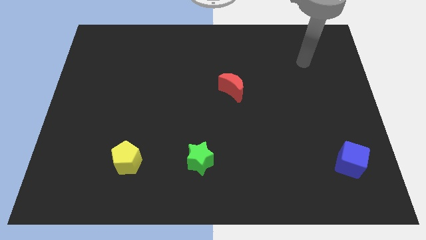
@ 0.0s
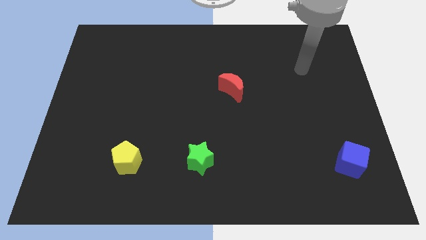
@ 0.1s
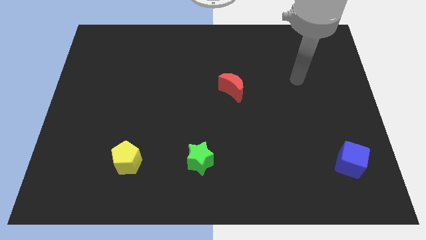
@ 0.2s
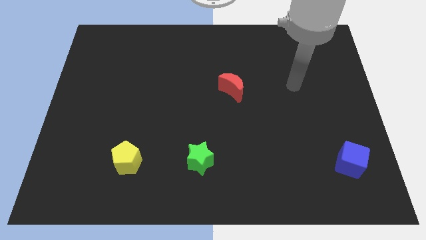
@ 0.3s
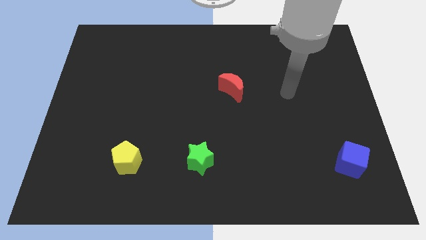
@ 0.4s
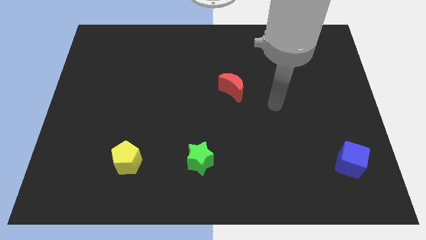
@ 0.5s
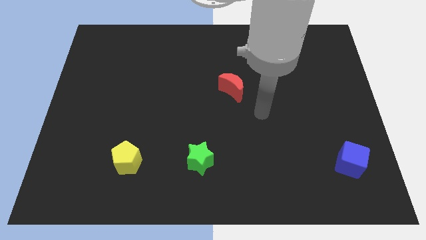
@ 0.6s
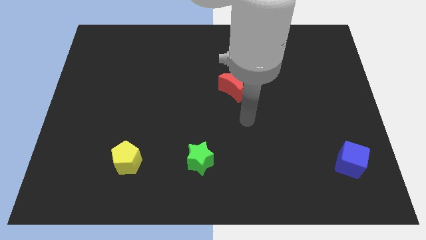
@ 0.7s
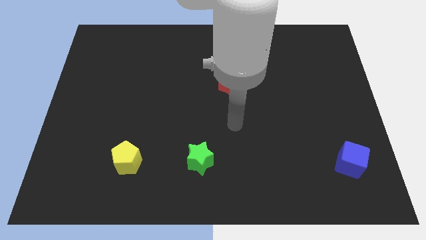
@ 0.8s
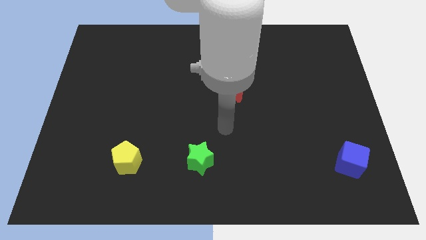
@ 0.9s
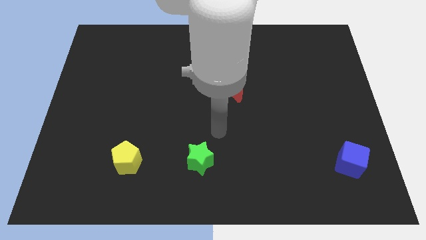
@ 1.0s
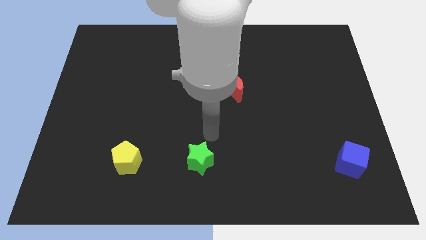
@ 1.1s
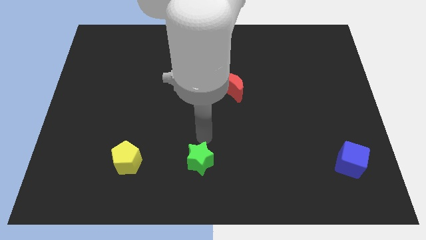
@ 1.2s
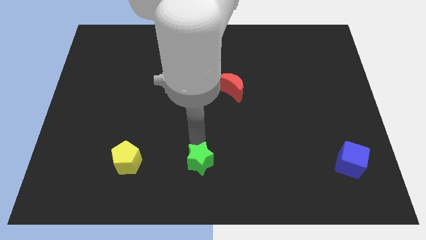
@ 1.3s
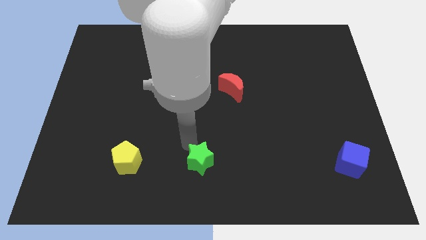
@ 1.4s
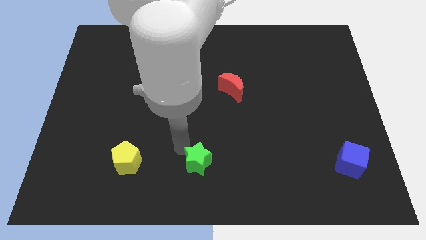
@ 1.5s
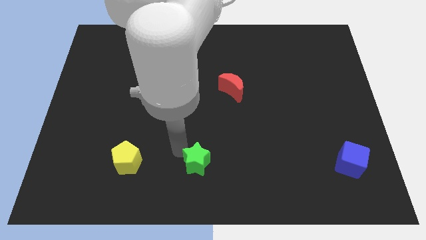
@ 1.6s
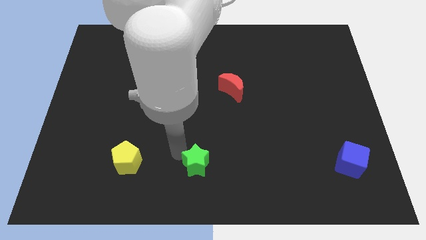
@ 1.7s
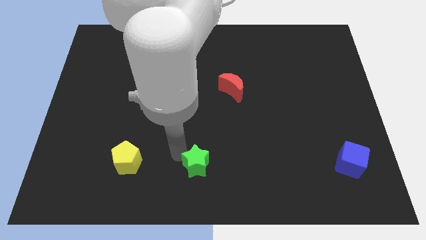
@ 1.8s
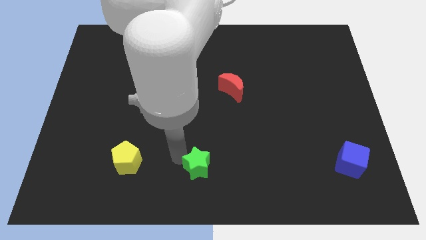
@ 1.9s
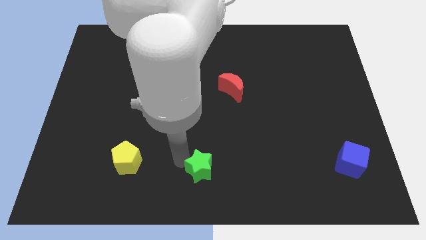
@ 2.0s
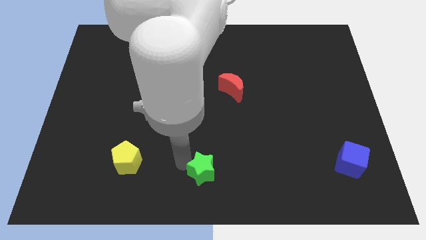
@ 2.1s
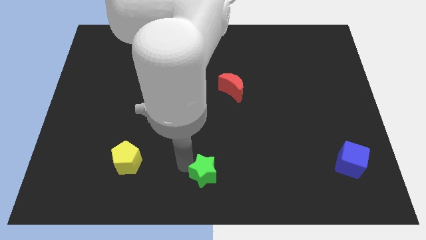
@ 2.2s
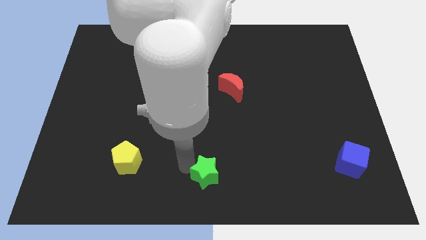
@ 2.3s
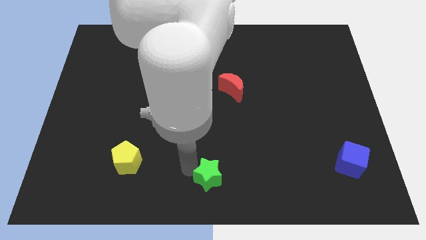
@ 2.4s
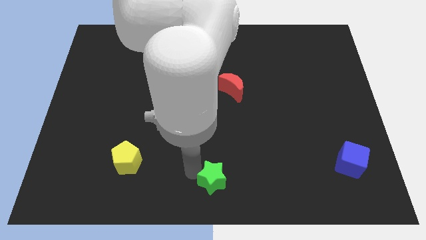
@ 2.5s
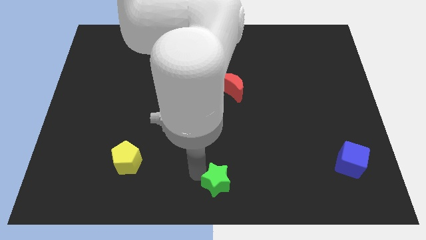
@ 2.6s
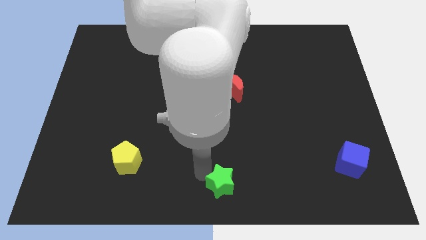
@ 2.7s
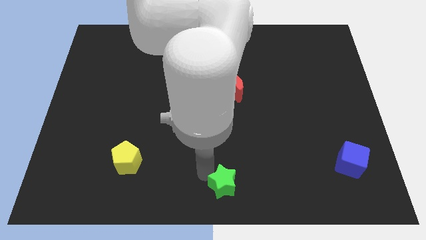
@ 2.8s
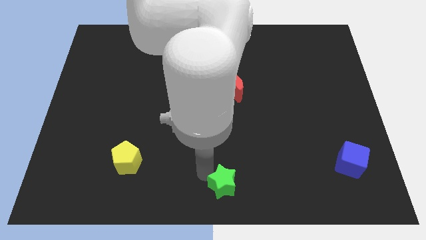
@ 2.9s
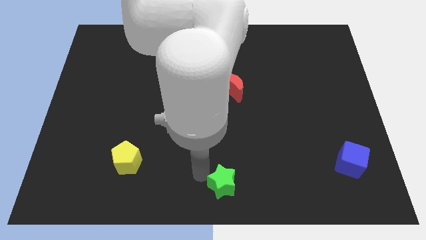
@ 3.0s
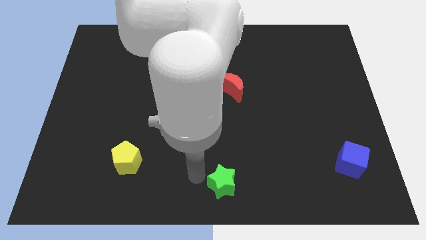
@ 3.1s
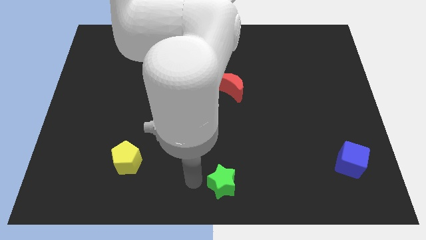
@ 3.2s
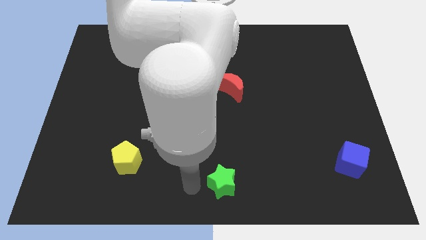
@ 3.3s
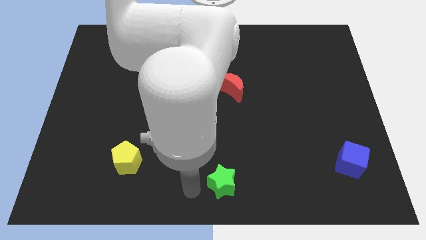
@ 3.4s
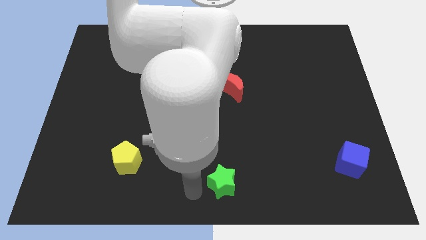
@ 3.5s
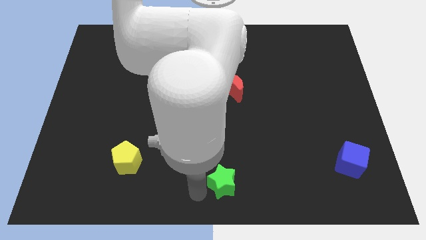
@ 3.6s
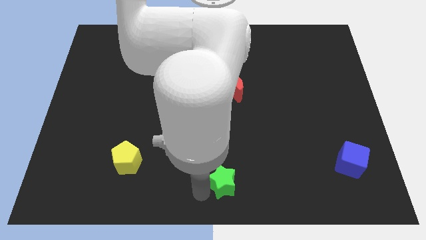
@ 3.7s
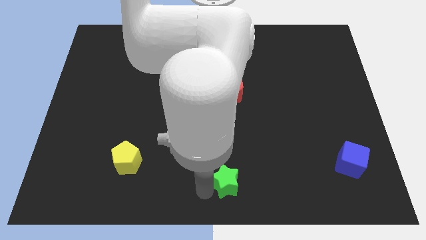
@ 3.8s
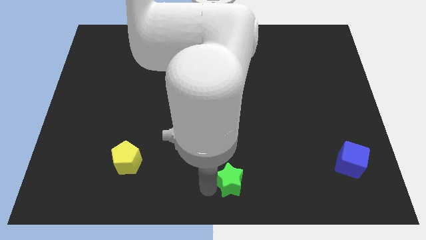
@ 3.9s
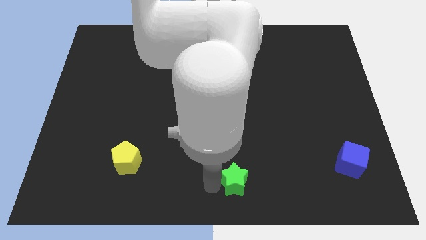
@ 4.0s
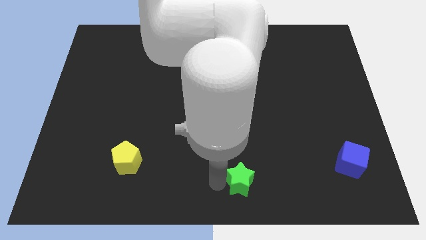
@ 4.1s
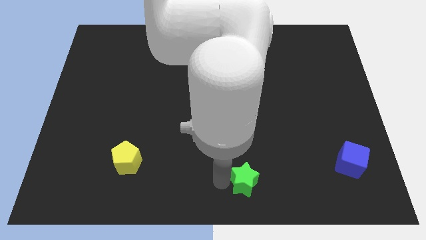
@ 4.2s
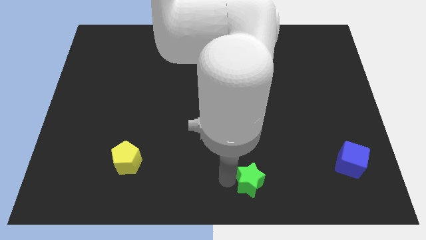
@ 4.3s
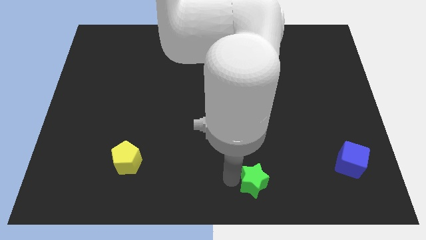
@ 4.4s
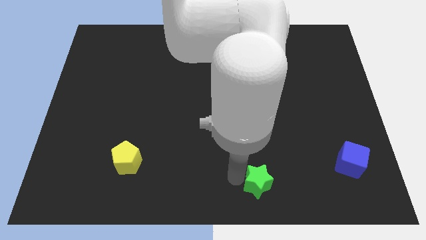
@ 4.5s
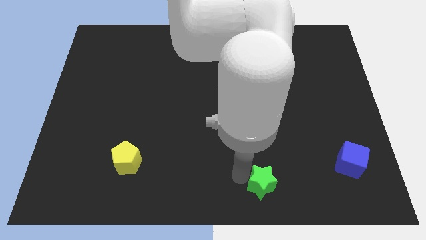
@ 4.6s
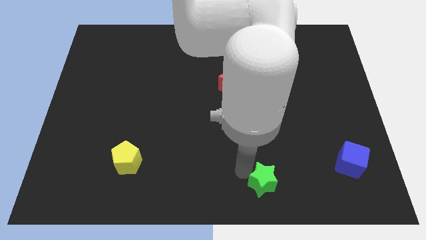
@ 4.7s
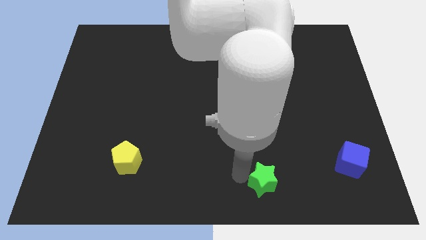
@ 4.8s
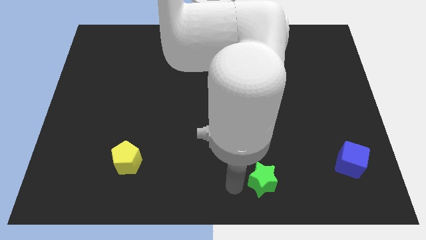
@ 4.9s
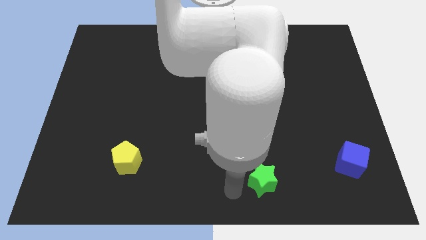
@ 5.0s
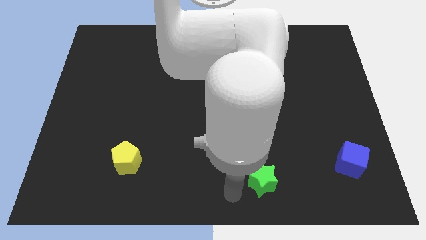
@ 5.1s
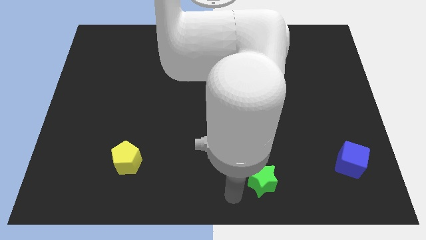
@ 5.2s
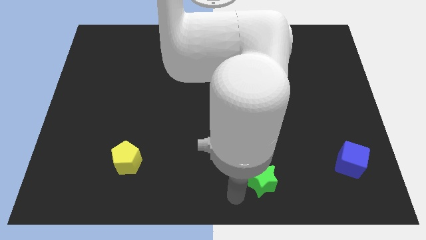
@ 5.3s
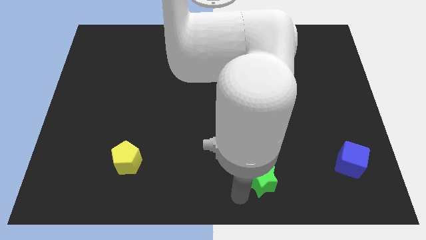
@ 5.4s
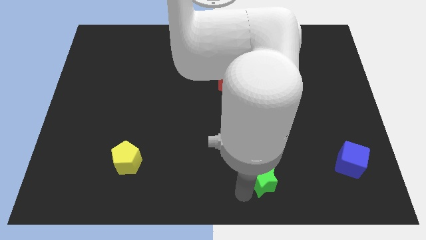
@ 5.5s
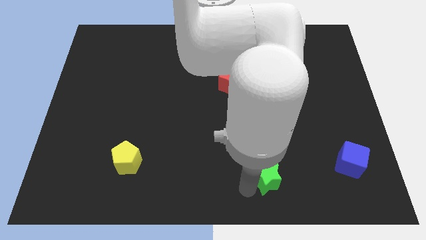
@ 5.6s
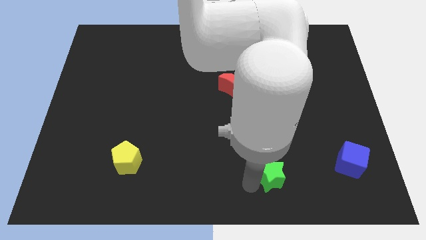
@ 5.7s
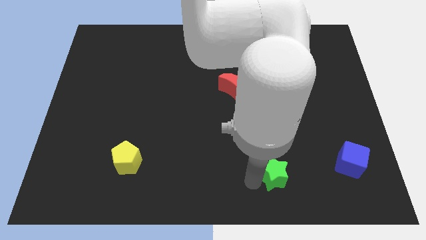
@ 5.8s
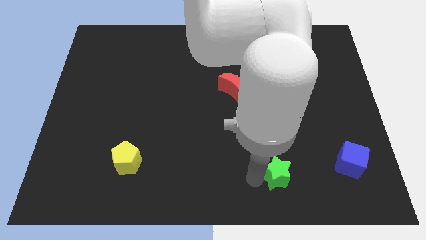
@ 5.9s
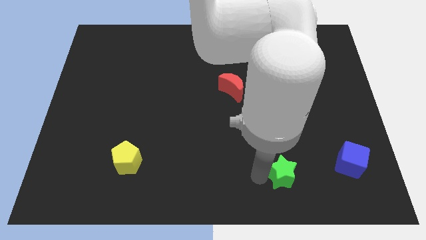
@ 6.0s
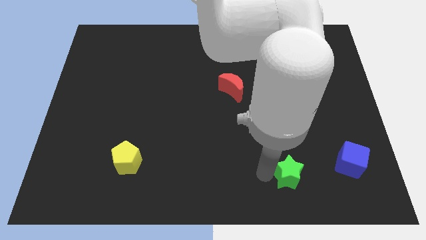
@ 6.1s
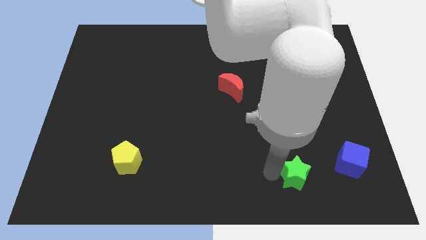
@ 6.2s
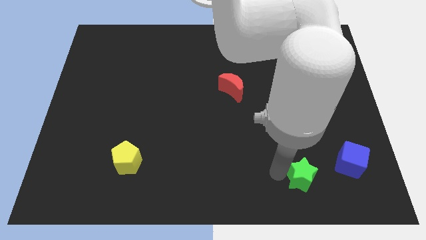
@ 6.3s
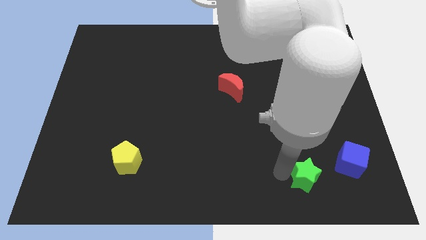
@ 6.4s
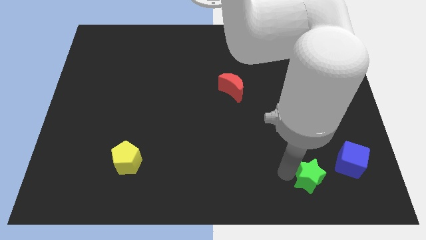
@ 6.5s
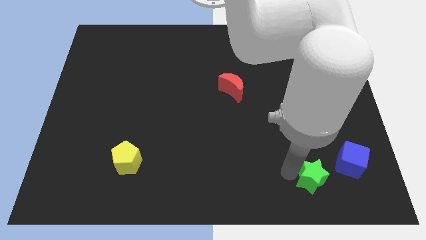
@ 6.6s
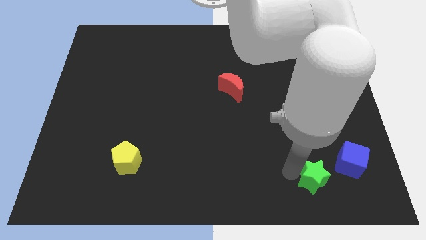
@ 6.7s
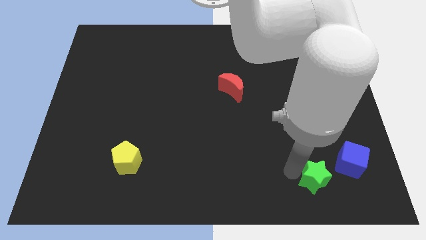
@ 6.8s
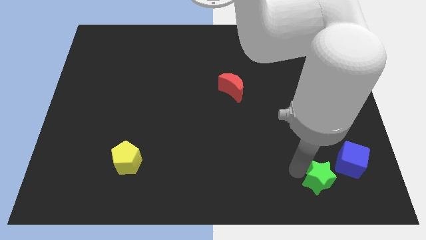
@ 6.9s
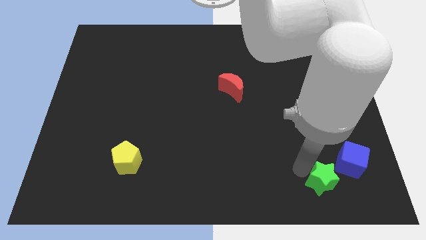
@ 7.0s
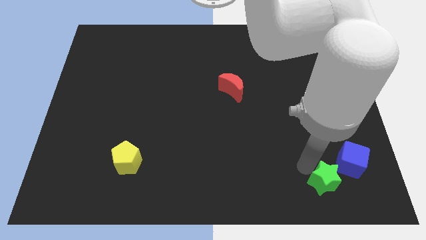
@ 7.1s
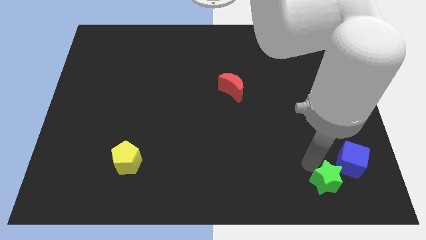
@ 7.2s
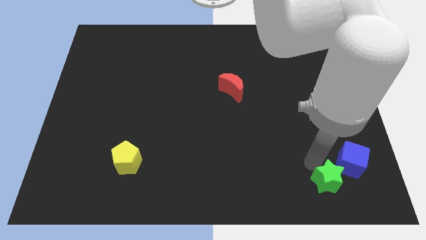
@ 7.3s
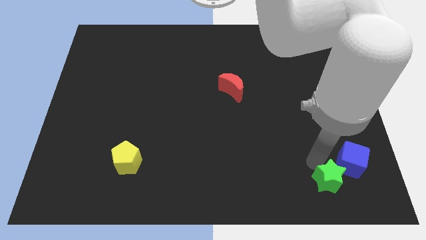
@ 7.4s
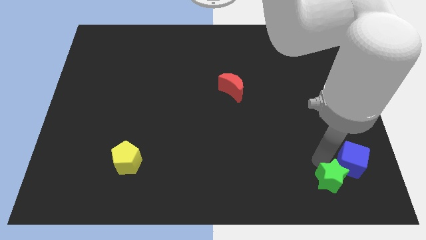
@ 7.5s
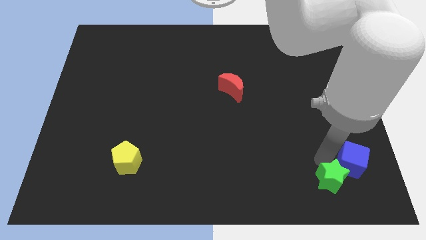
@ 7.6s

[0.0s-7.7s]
push the green star close to the cube

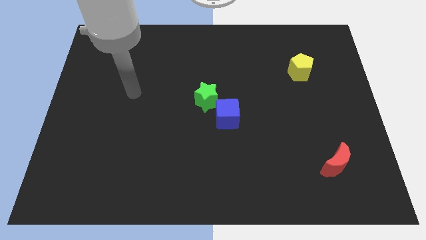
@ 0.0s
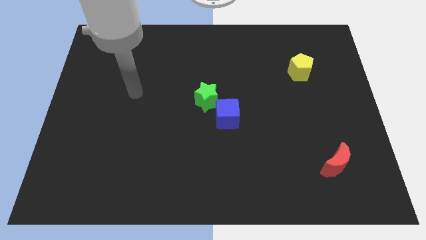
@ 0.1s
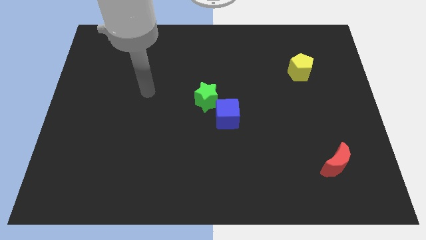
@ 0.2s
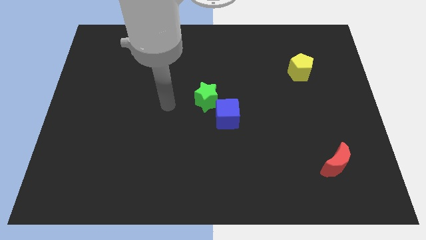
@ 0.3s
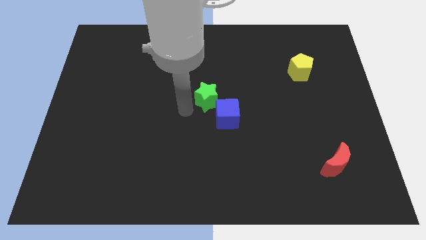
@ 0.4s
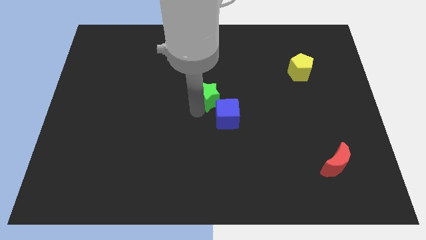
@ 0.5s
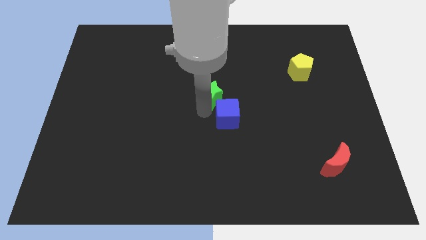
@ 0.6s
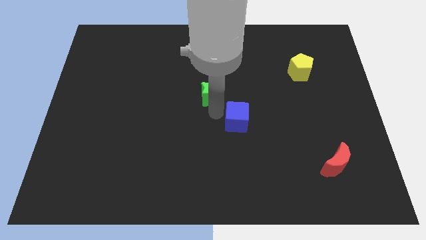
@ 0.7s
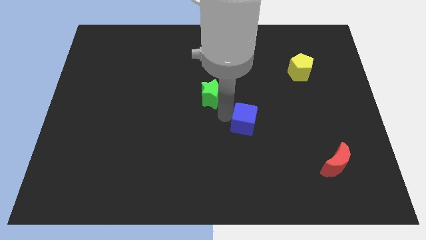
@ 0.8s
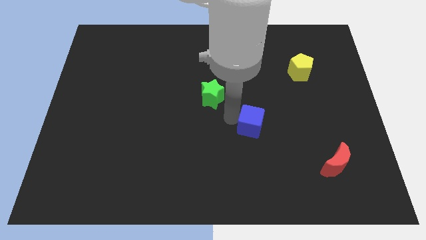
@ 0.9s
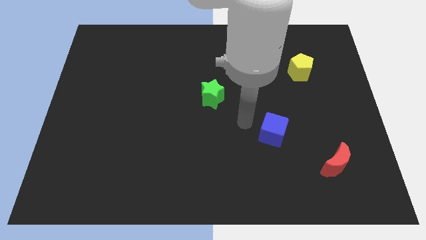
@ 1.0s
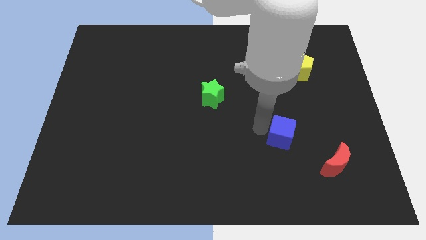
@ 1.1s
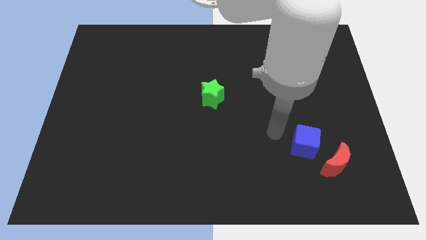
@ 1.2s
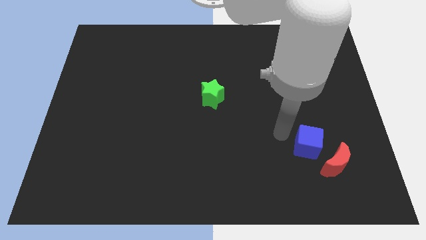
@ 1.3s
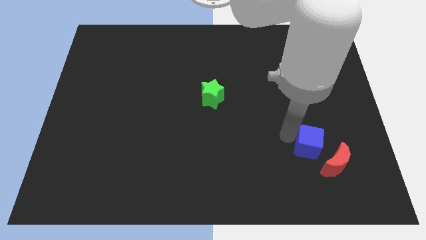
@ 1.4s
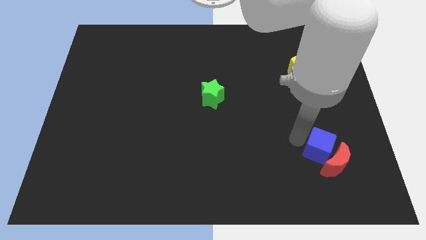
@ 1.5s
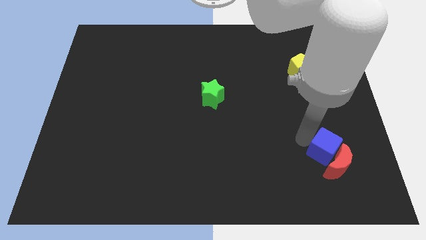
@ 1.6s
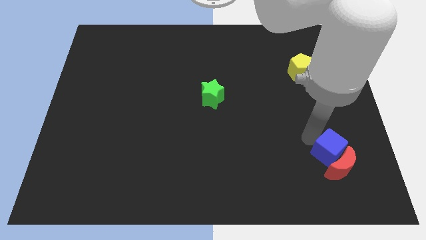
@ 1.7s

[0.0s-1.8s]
move the cube to the moon
